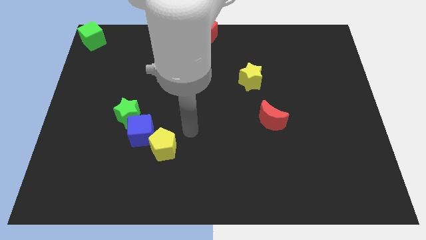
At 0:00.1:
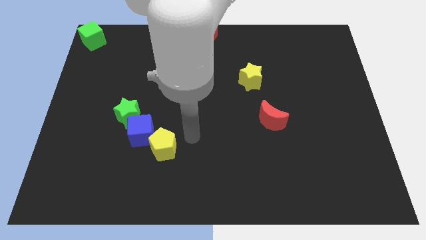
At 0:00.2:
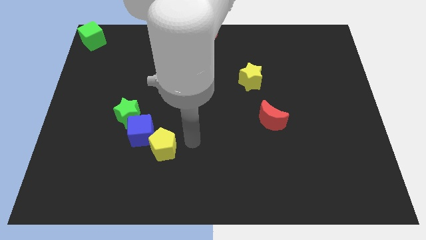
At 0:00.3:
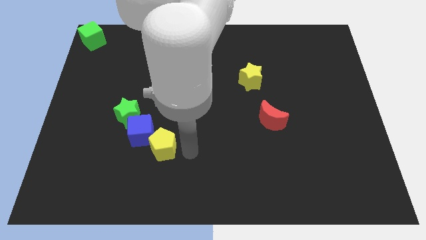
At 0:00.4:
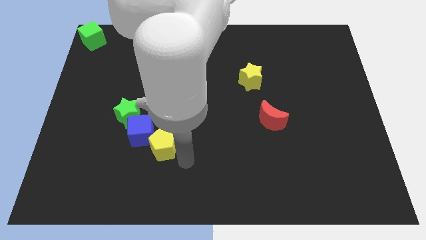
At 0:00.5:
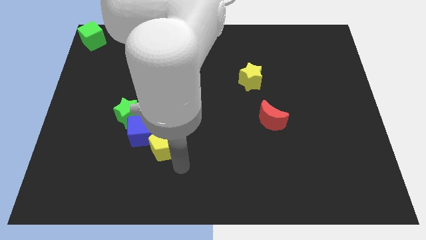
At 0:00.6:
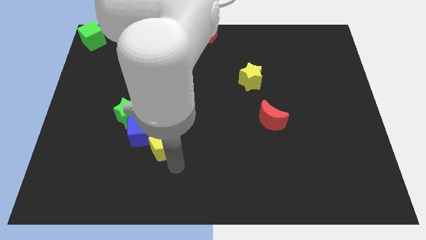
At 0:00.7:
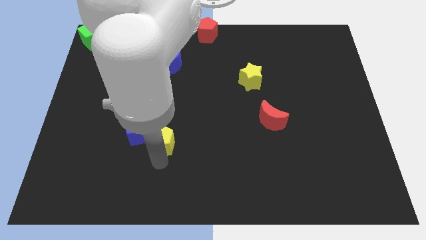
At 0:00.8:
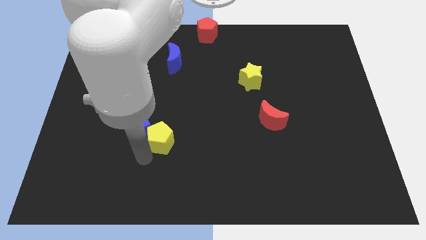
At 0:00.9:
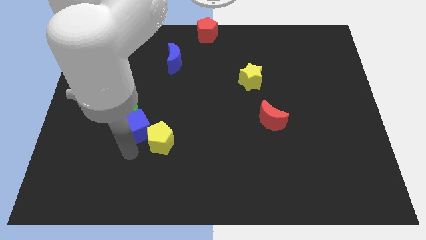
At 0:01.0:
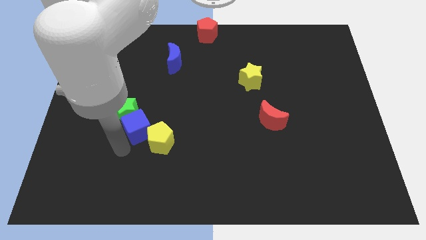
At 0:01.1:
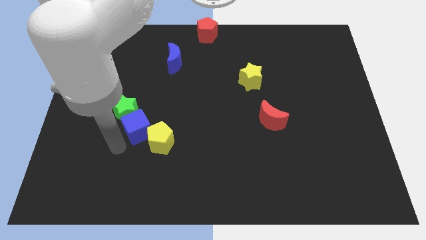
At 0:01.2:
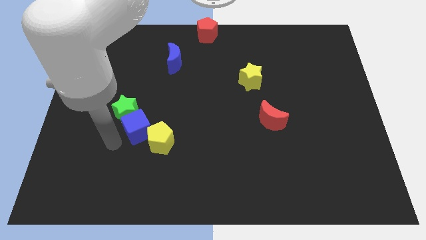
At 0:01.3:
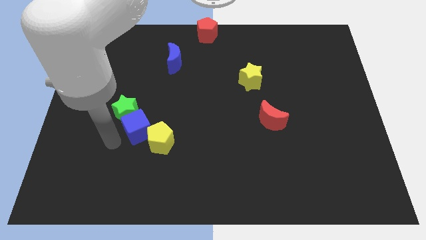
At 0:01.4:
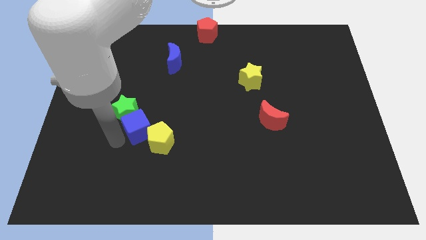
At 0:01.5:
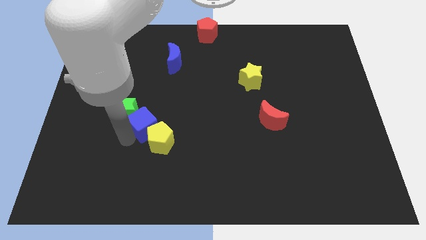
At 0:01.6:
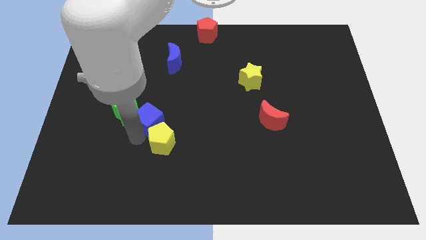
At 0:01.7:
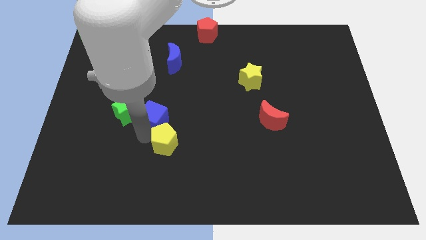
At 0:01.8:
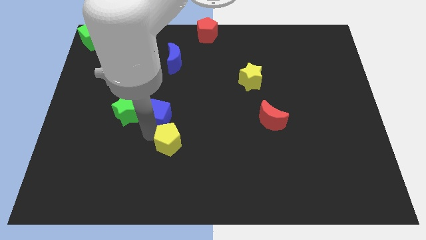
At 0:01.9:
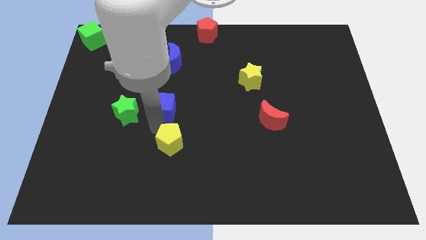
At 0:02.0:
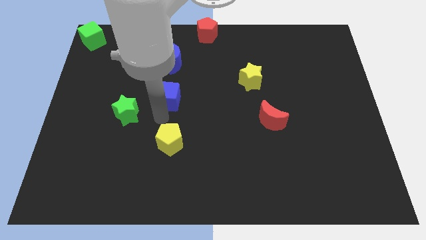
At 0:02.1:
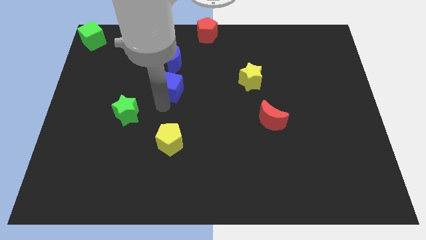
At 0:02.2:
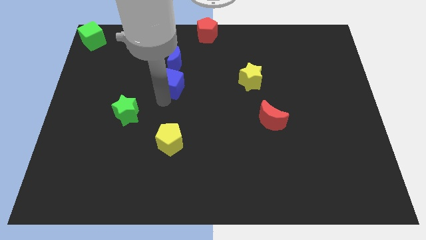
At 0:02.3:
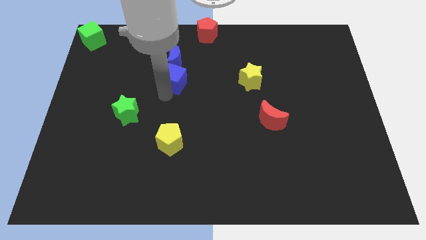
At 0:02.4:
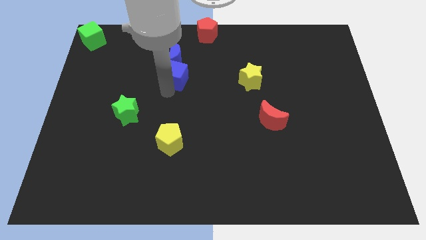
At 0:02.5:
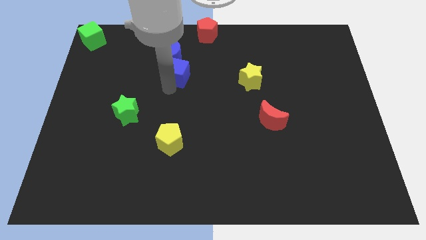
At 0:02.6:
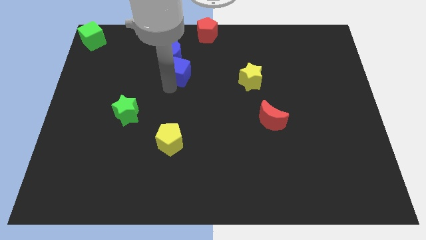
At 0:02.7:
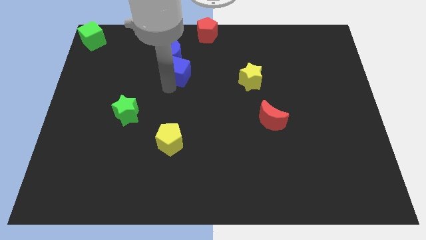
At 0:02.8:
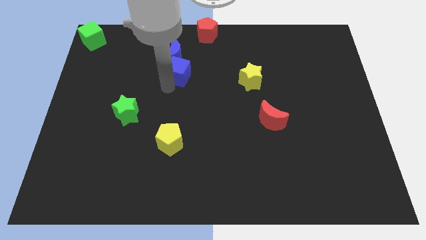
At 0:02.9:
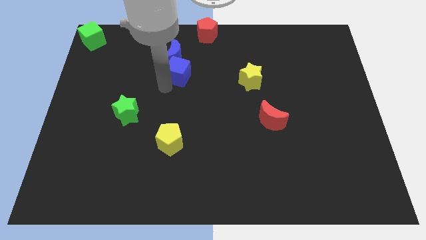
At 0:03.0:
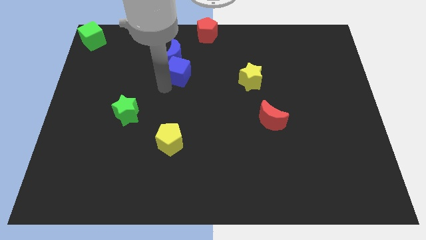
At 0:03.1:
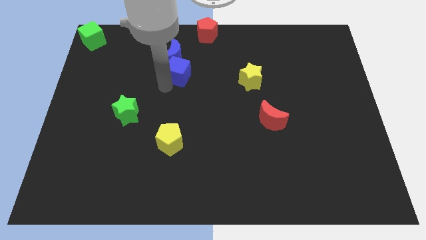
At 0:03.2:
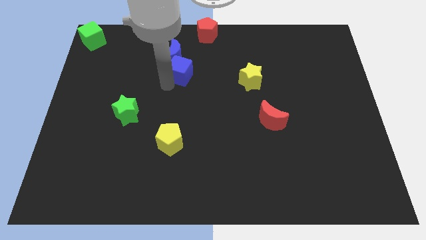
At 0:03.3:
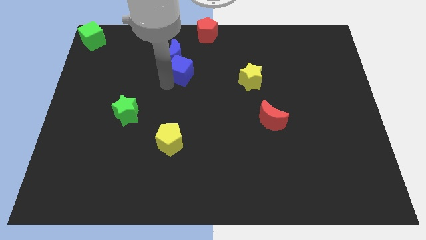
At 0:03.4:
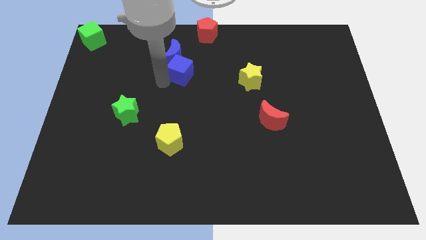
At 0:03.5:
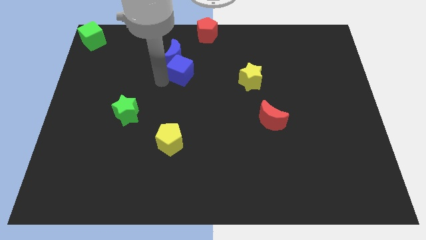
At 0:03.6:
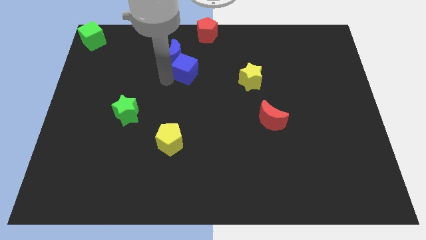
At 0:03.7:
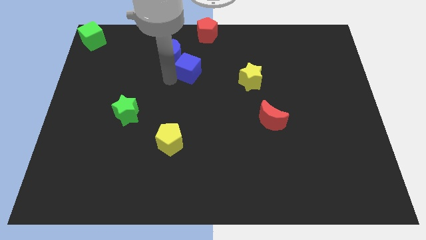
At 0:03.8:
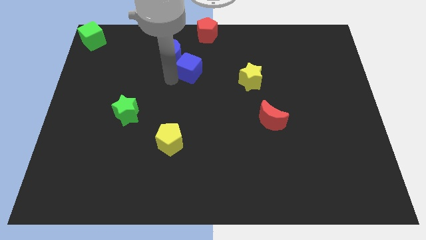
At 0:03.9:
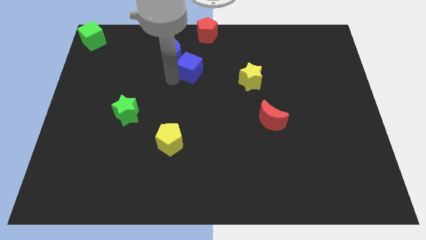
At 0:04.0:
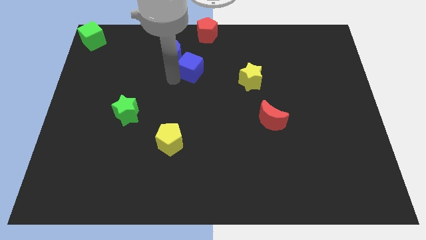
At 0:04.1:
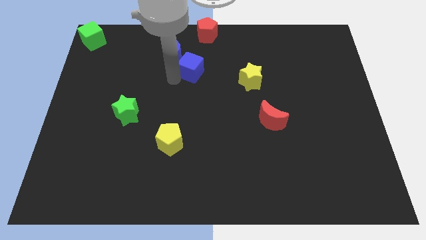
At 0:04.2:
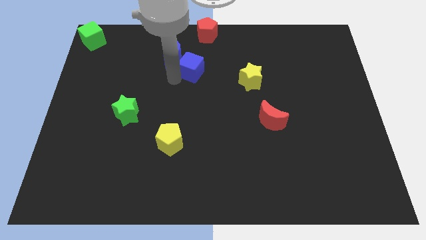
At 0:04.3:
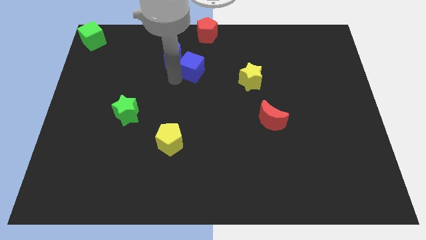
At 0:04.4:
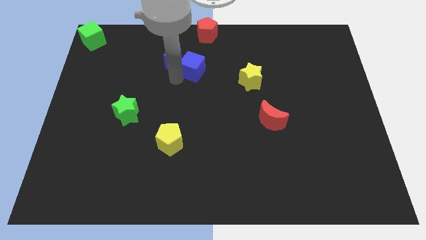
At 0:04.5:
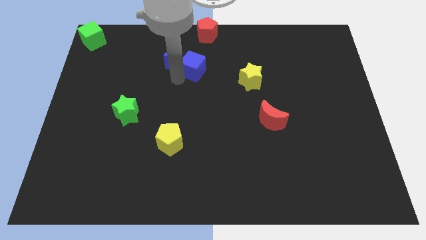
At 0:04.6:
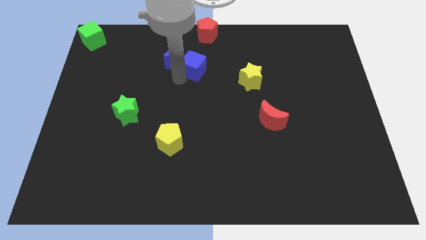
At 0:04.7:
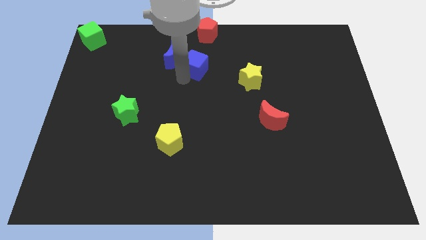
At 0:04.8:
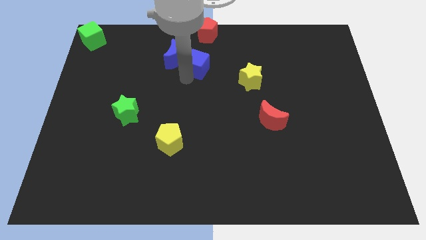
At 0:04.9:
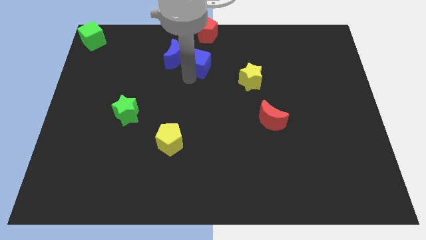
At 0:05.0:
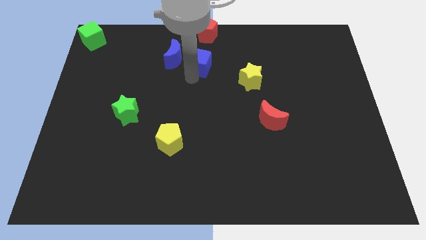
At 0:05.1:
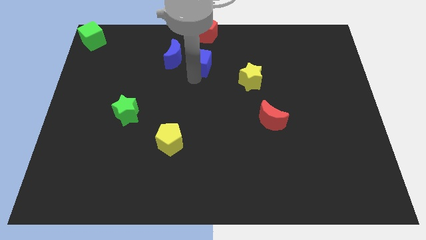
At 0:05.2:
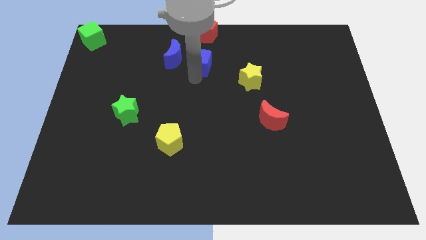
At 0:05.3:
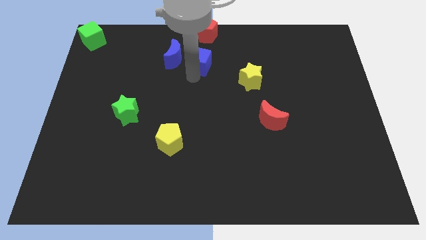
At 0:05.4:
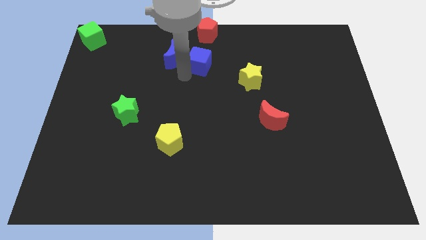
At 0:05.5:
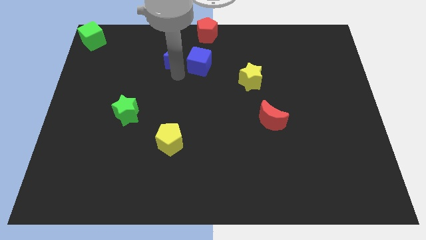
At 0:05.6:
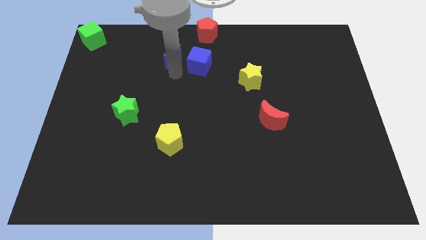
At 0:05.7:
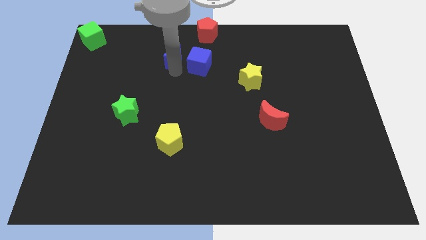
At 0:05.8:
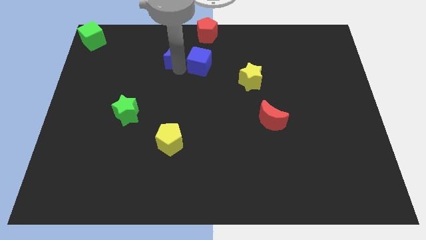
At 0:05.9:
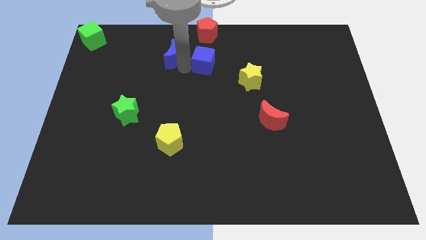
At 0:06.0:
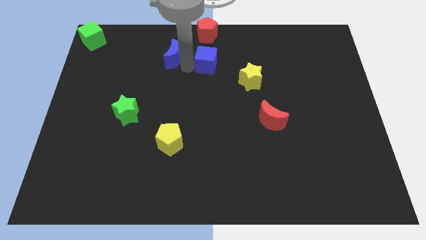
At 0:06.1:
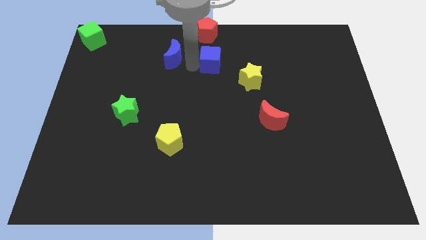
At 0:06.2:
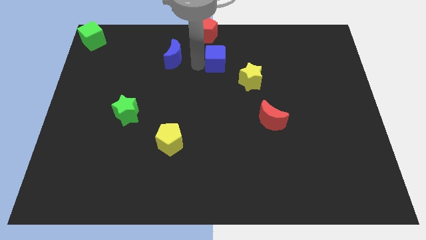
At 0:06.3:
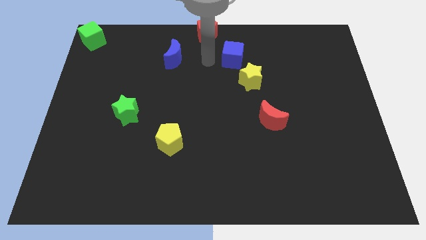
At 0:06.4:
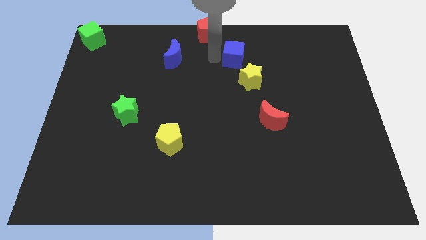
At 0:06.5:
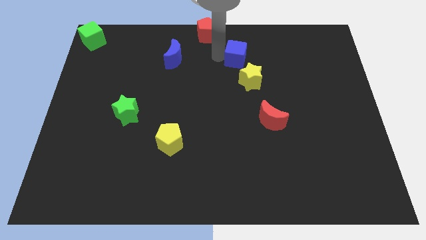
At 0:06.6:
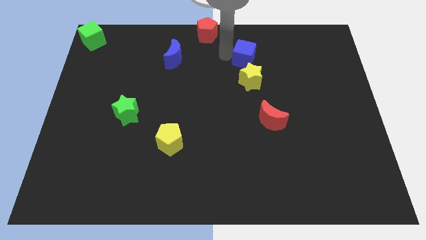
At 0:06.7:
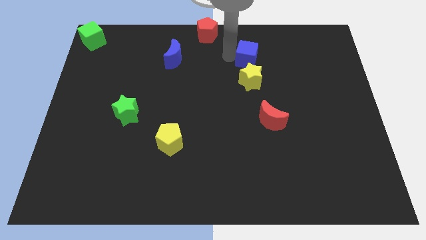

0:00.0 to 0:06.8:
separate the blue cube from the group of blocks

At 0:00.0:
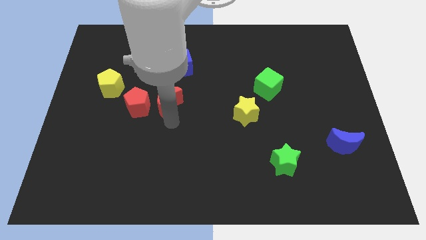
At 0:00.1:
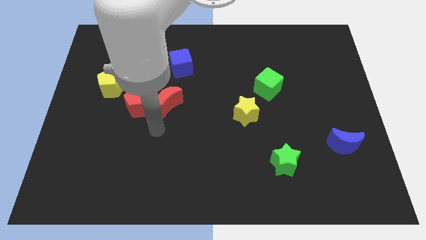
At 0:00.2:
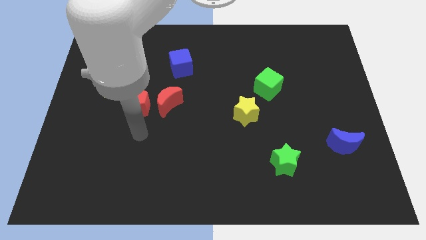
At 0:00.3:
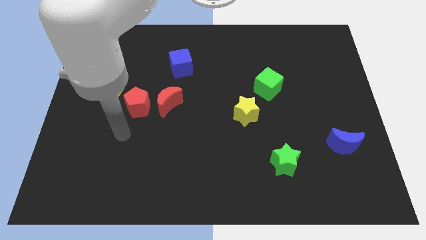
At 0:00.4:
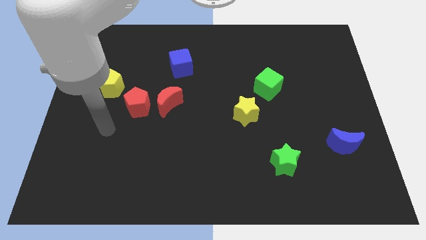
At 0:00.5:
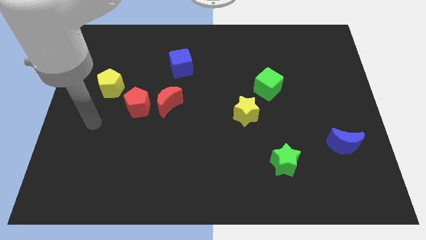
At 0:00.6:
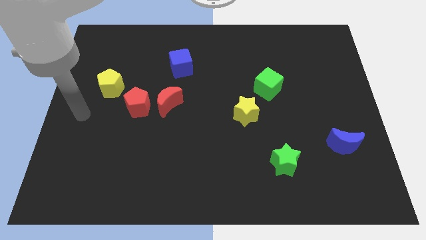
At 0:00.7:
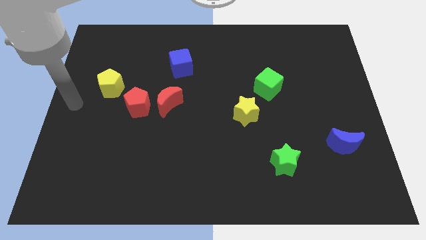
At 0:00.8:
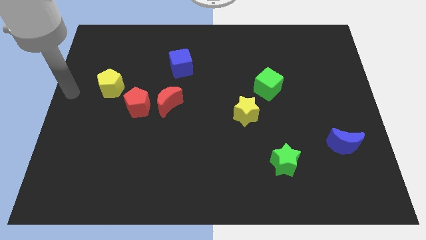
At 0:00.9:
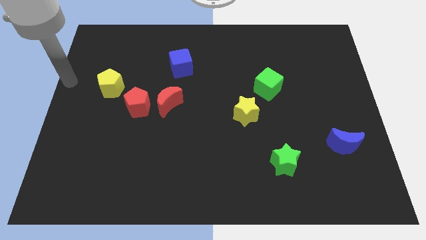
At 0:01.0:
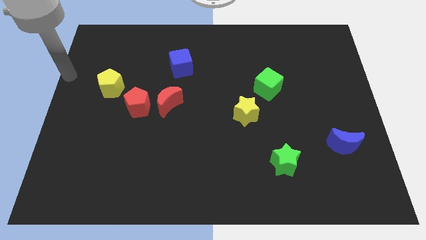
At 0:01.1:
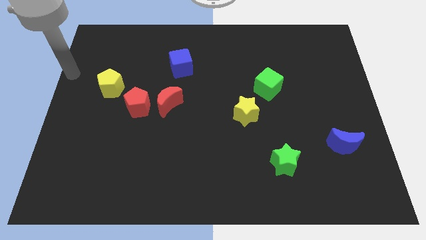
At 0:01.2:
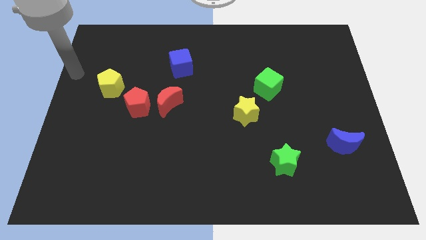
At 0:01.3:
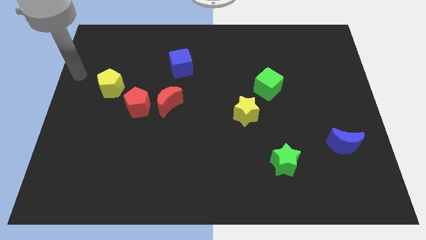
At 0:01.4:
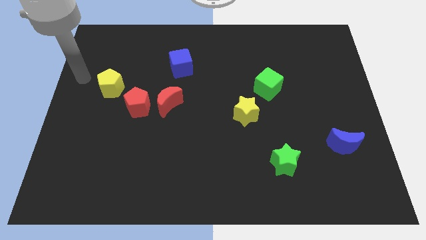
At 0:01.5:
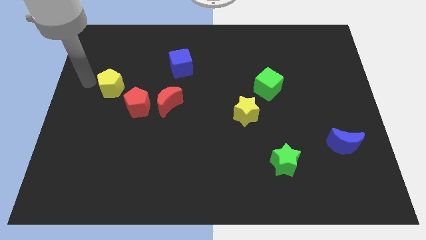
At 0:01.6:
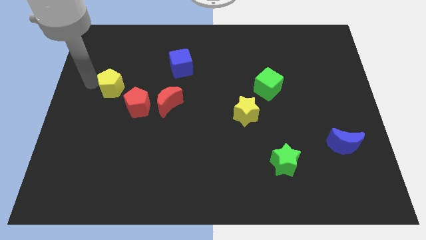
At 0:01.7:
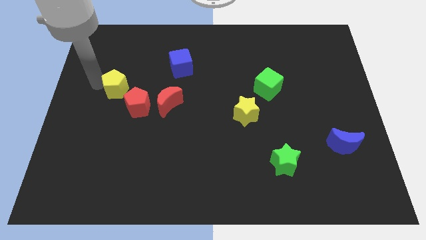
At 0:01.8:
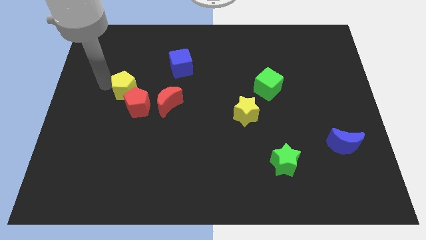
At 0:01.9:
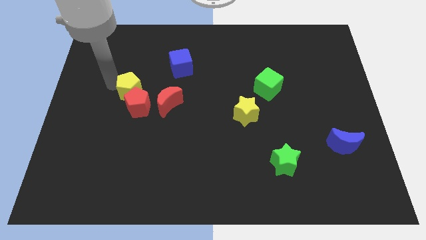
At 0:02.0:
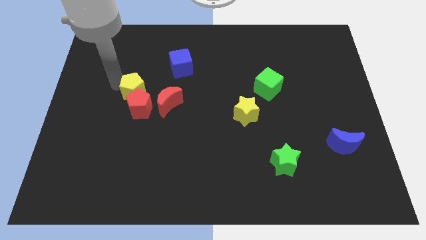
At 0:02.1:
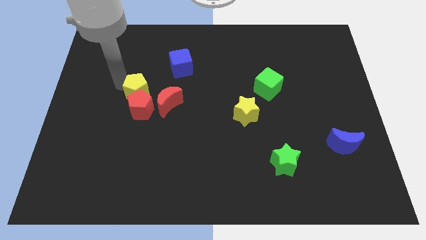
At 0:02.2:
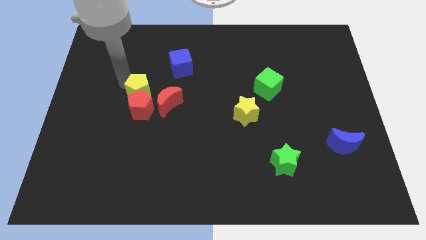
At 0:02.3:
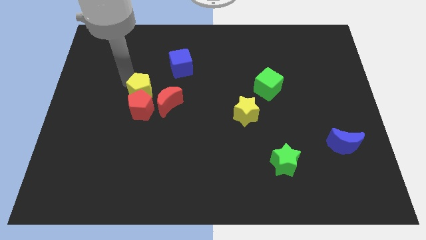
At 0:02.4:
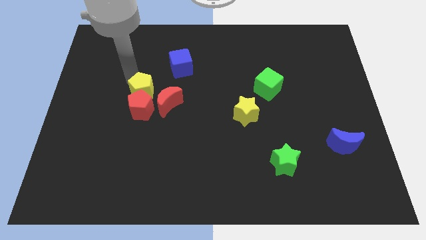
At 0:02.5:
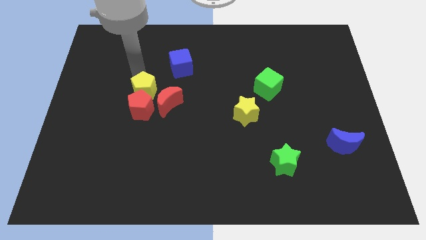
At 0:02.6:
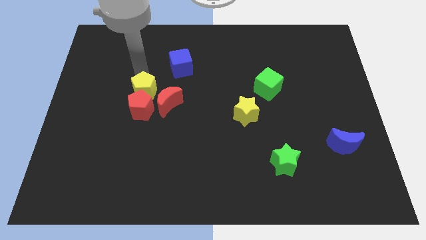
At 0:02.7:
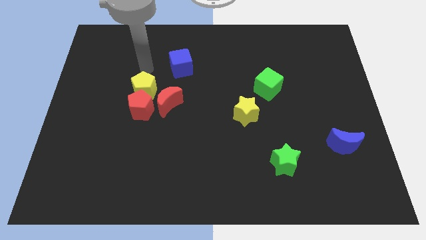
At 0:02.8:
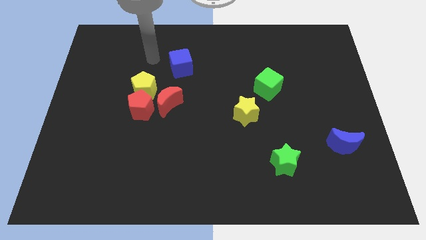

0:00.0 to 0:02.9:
push the yellow pentagon into red pentagon
